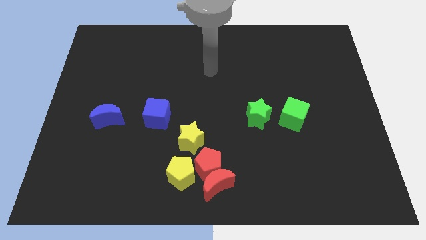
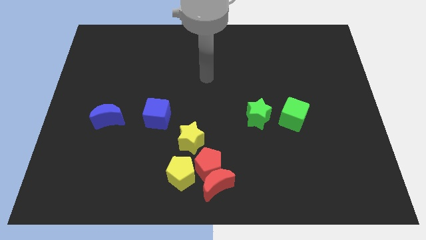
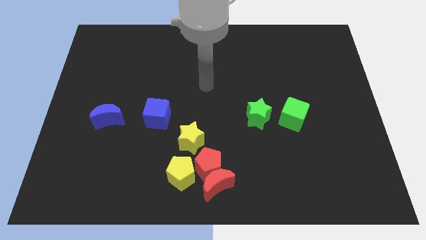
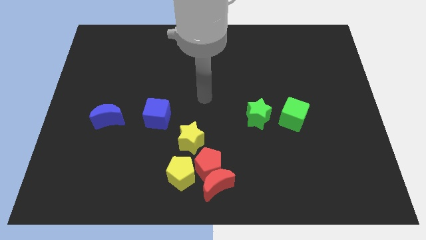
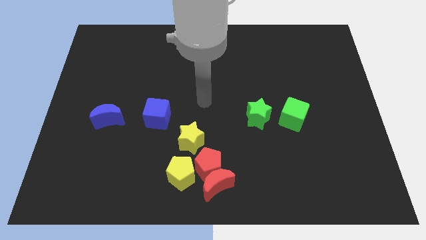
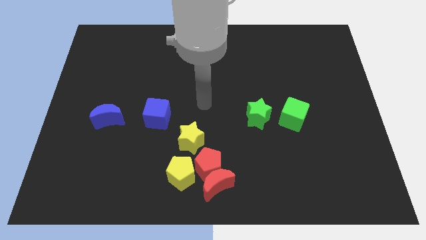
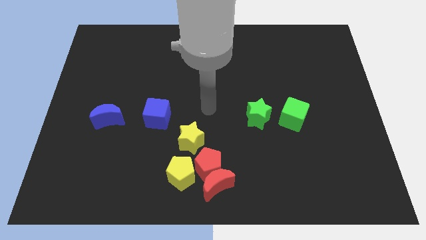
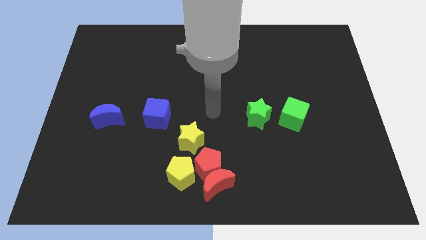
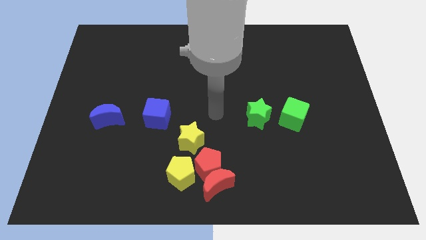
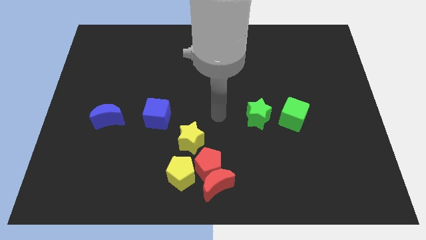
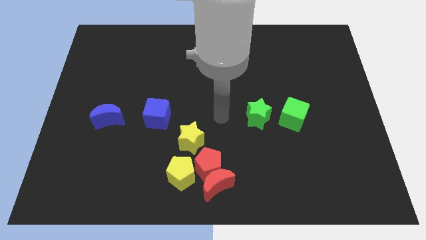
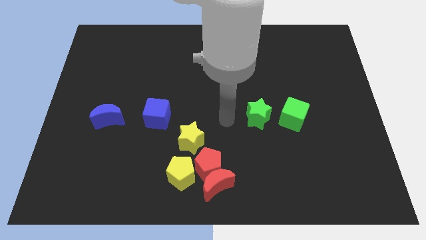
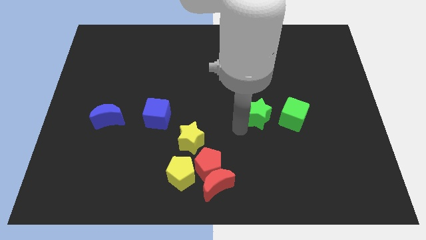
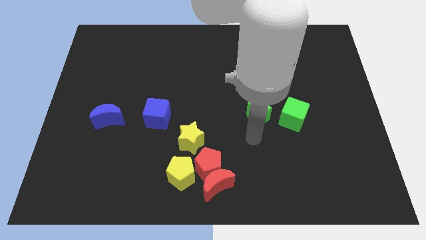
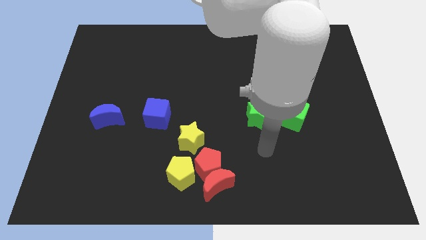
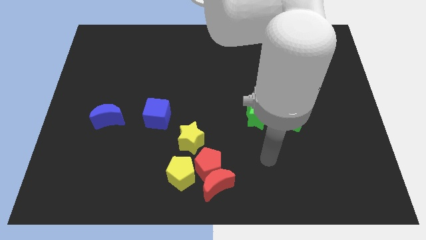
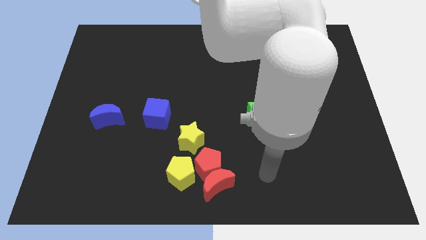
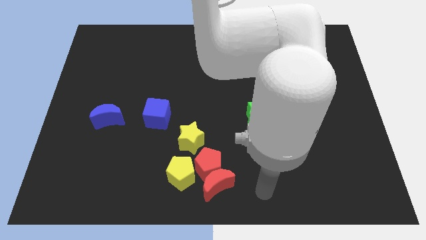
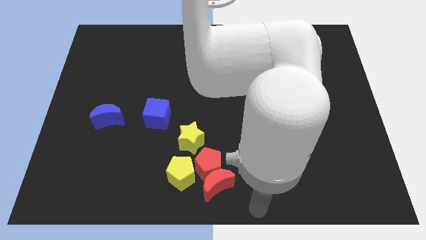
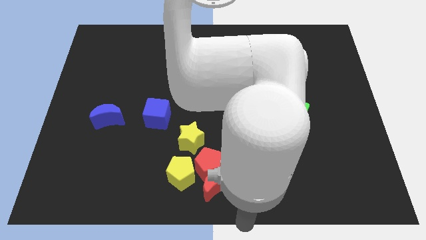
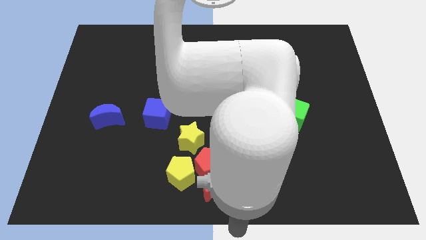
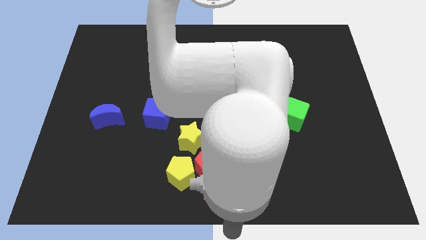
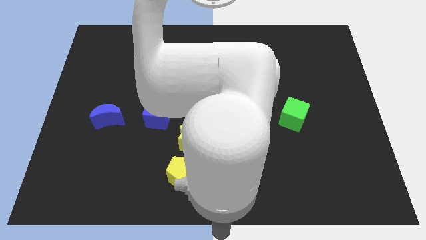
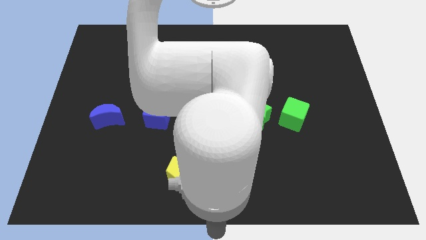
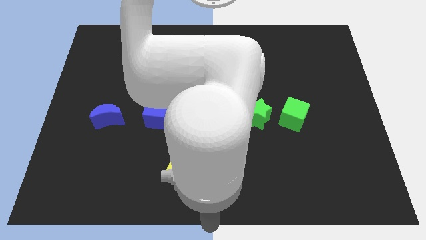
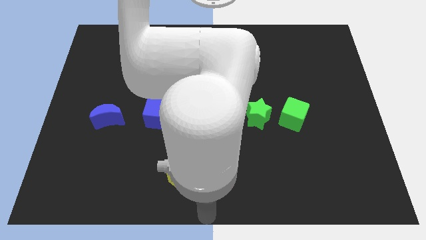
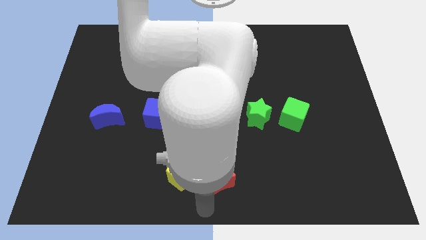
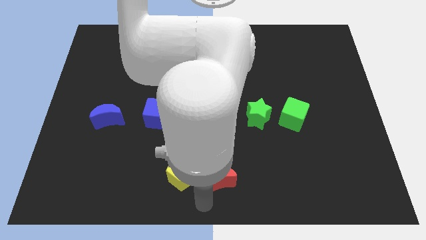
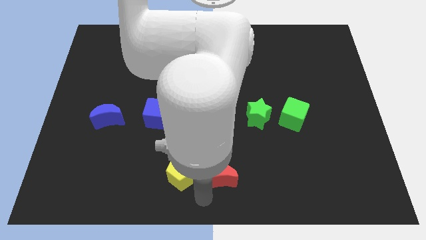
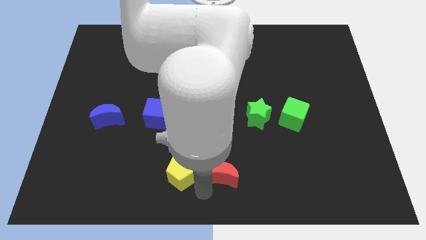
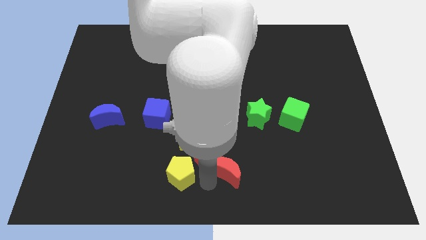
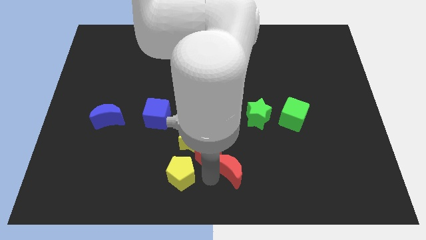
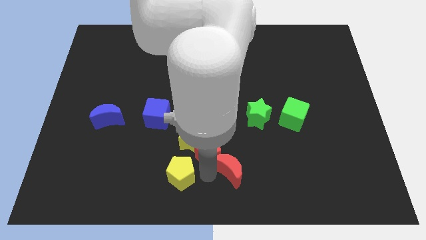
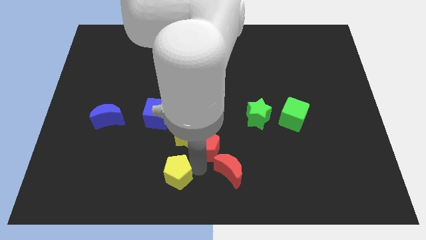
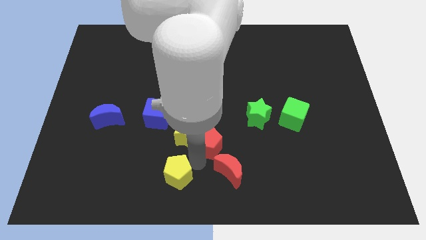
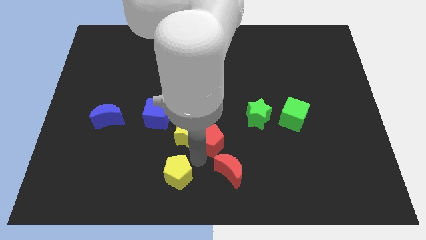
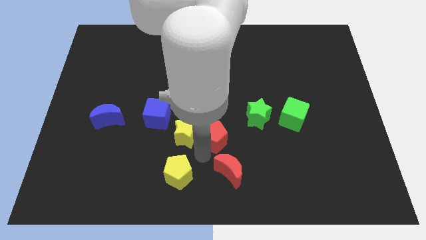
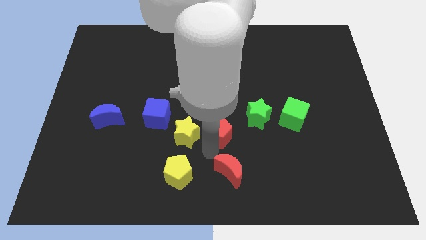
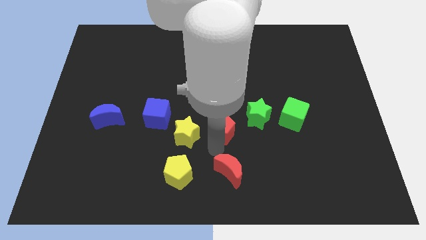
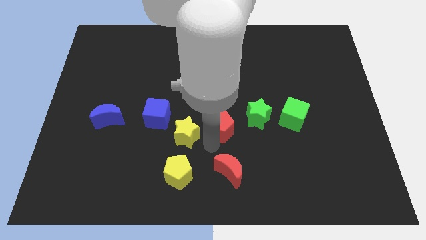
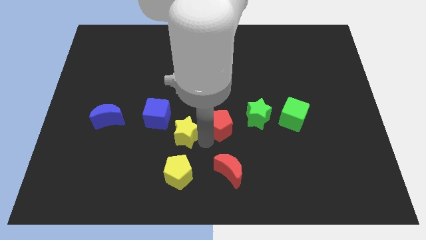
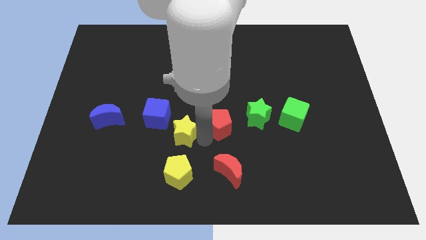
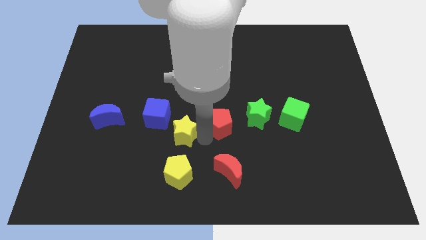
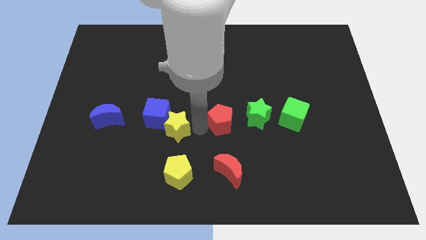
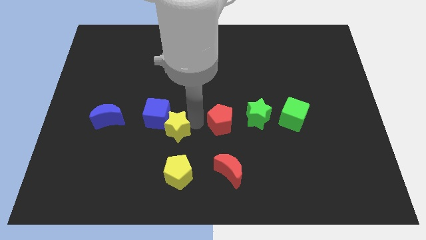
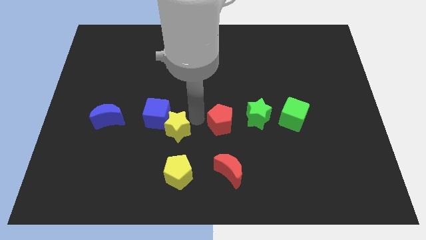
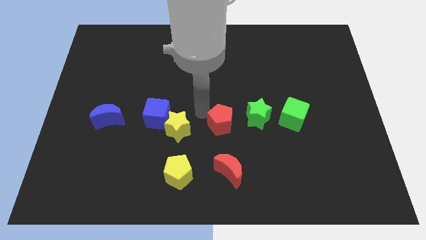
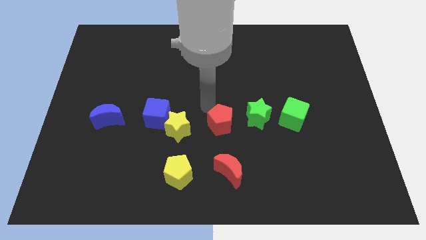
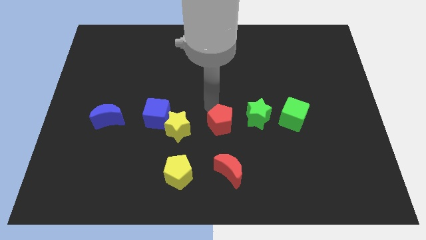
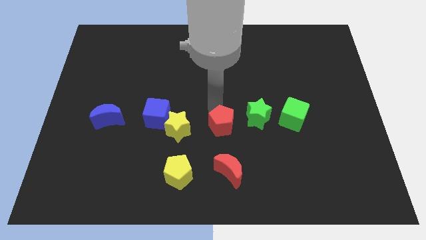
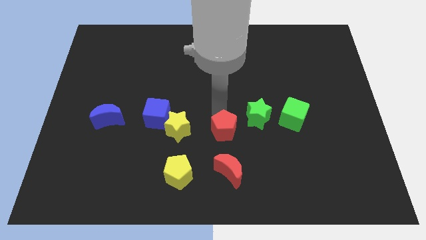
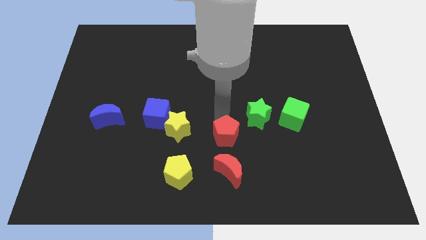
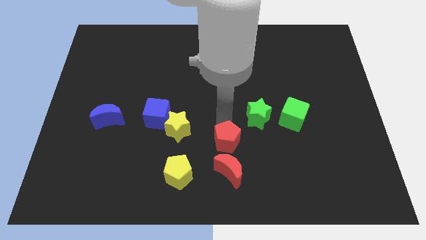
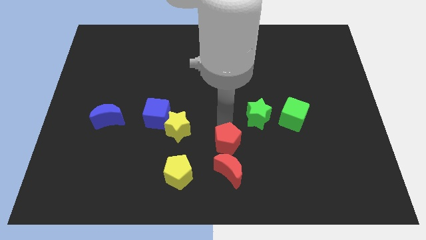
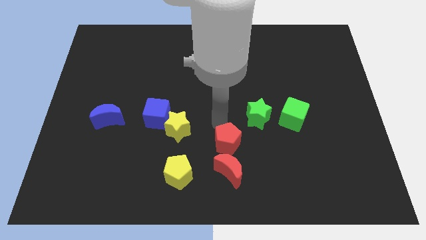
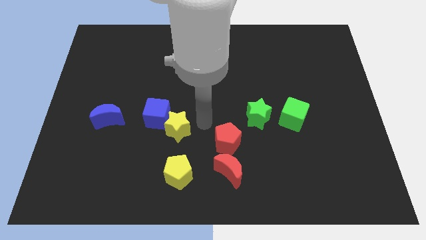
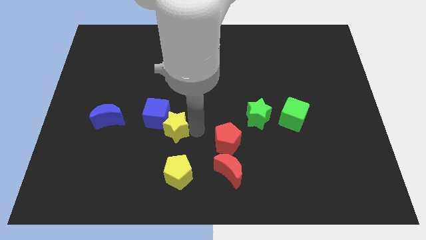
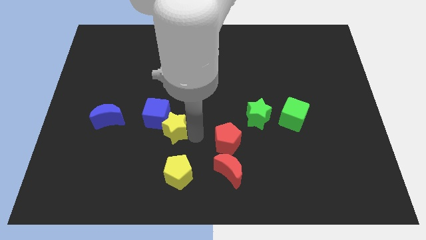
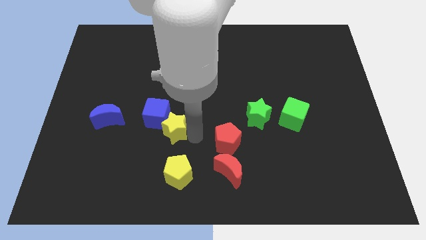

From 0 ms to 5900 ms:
place the red pentagon above the red crescent

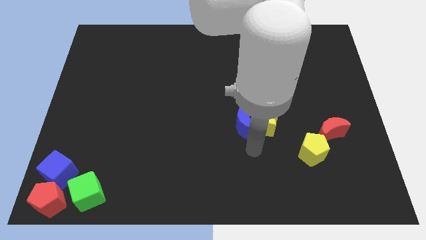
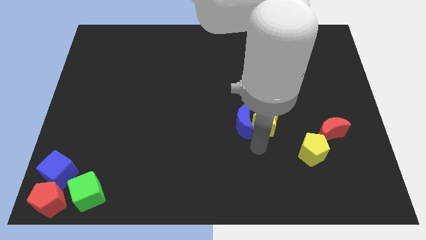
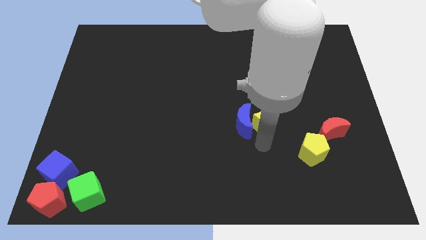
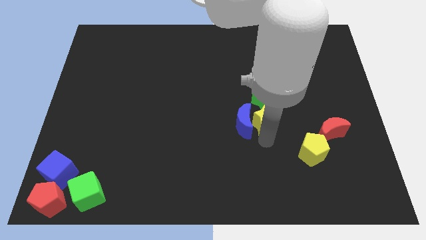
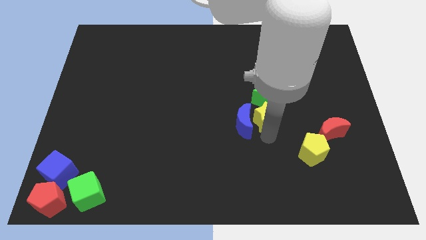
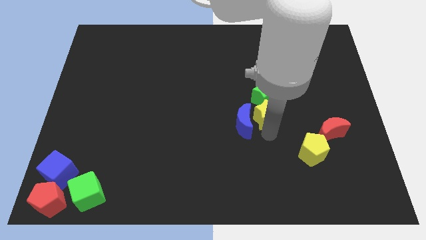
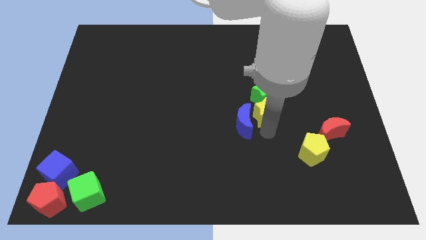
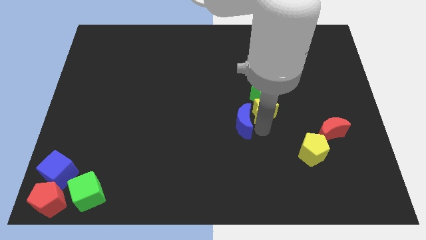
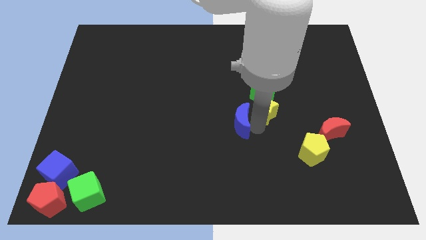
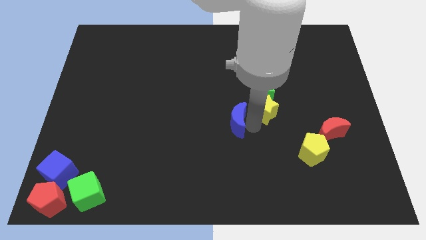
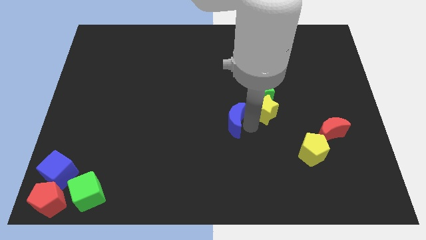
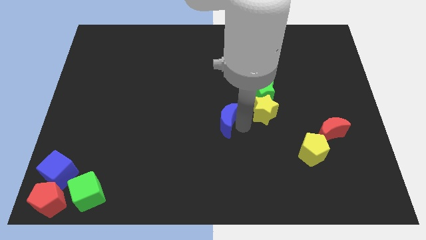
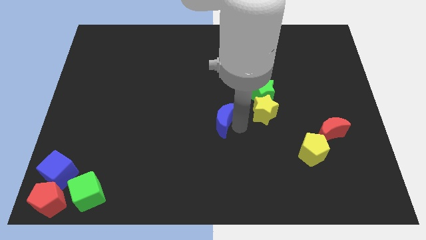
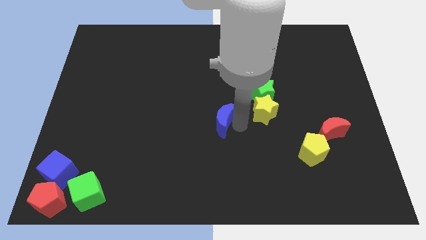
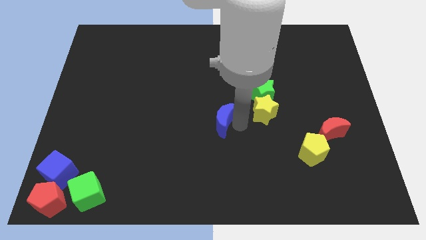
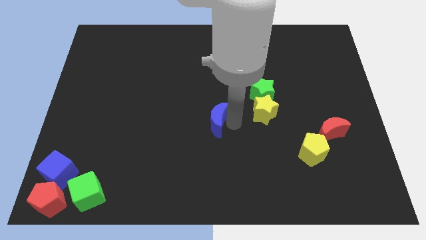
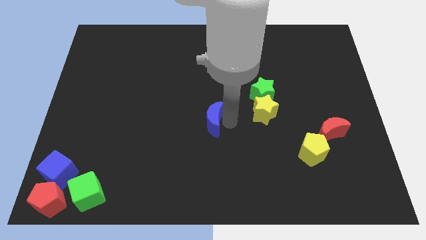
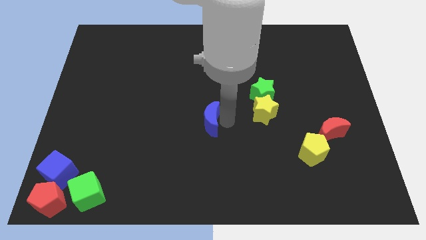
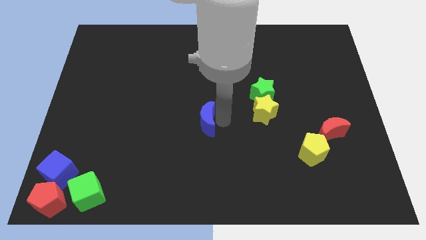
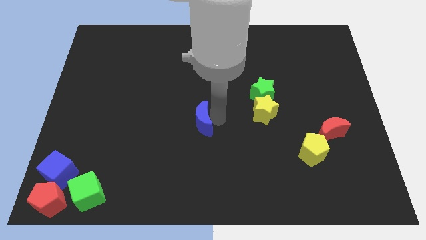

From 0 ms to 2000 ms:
separate the blue crescent with the yellow star

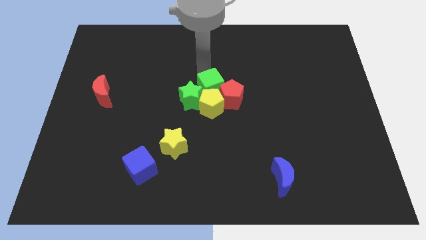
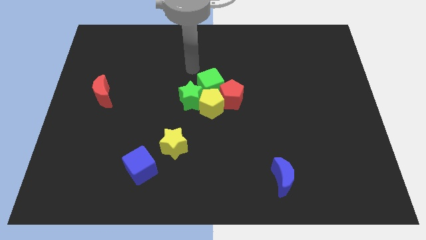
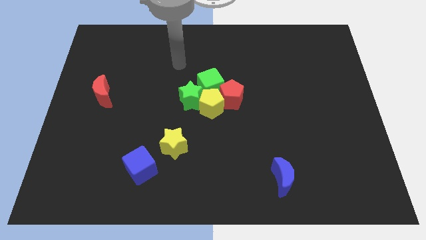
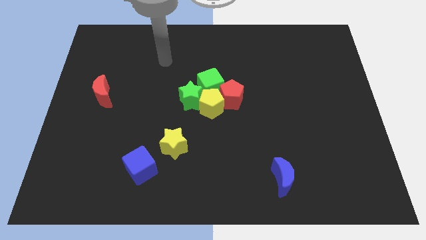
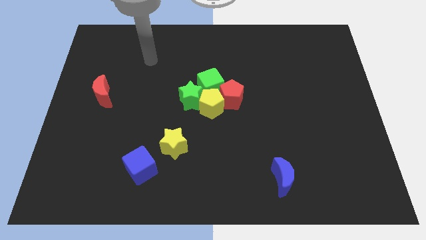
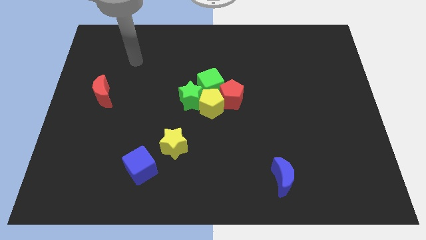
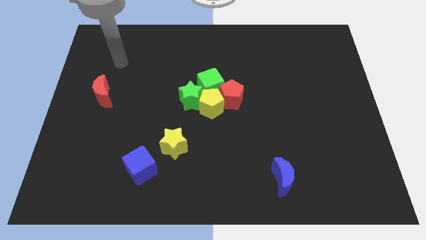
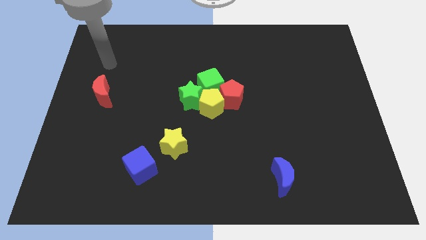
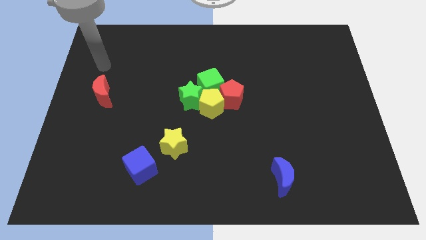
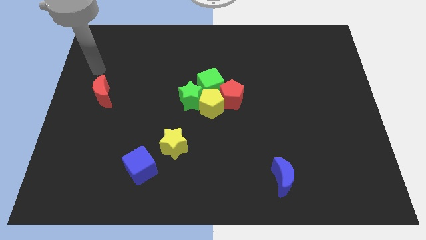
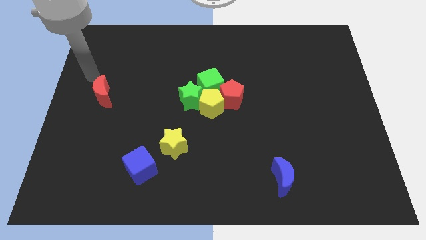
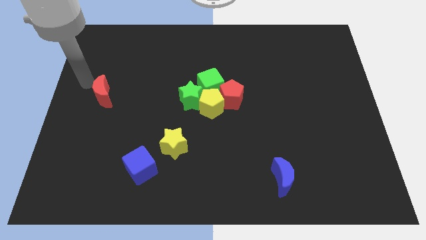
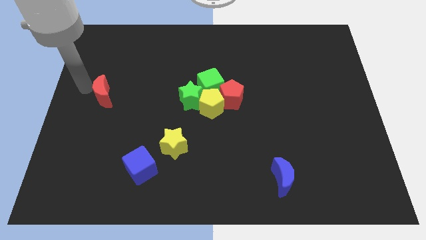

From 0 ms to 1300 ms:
move your arm to the left of the red crescent
